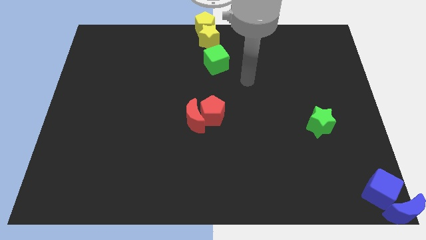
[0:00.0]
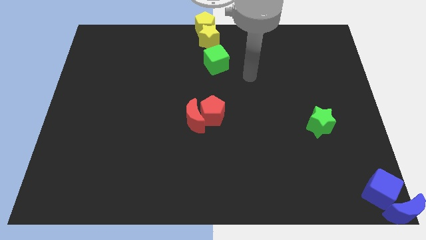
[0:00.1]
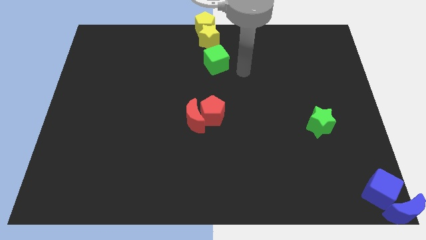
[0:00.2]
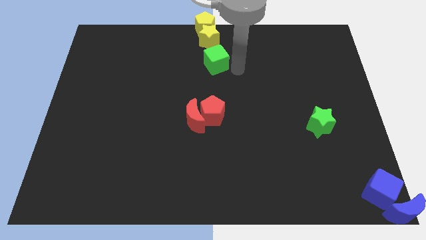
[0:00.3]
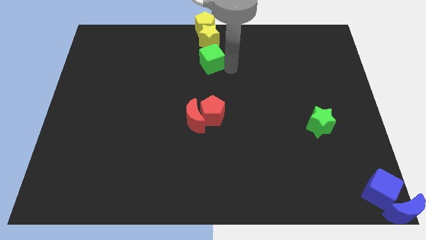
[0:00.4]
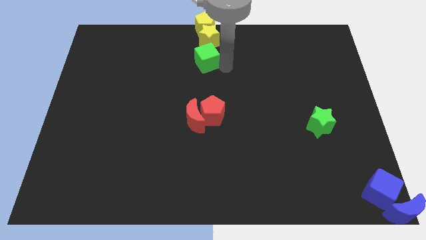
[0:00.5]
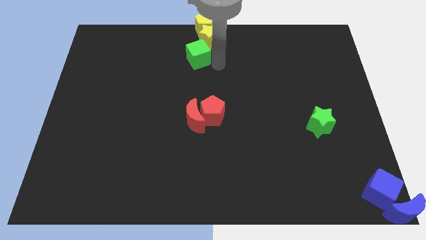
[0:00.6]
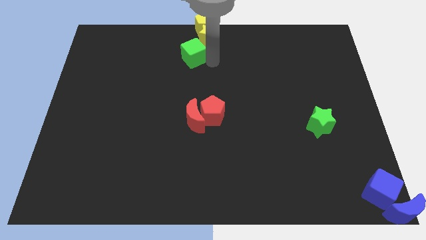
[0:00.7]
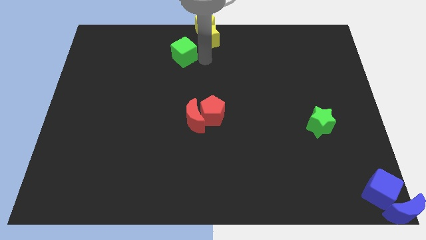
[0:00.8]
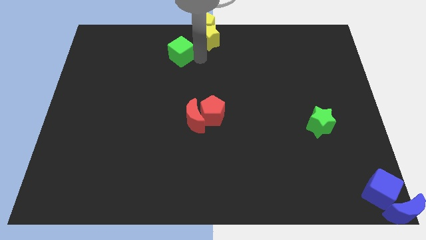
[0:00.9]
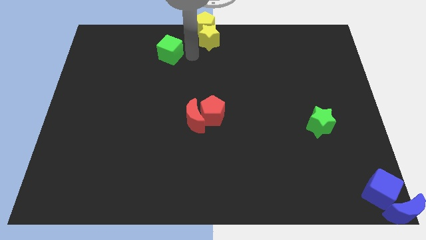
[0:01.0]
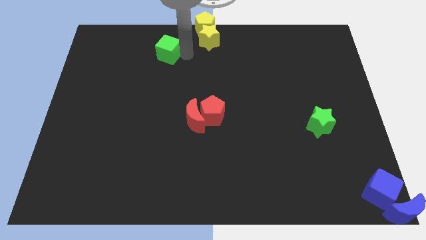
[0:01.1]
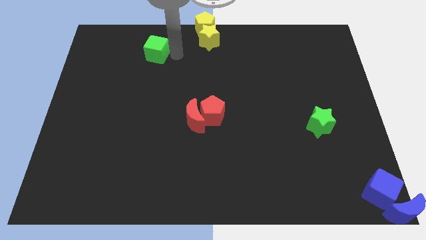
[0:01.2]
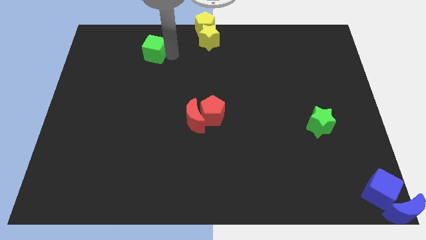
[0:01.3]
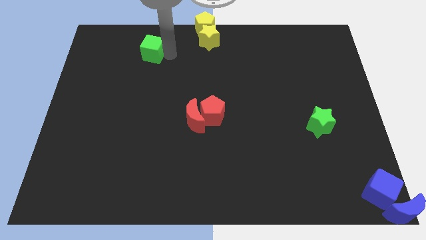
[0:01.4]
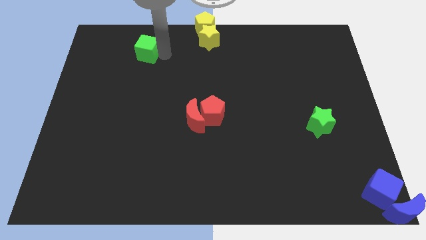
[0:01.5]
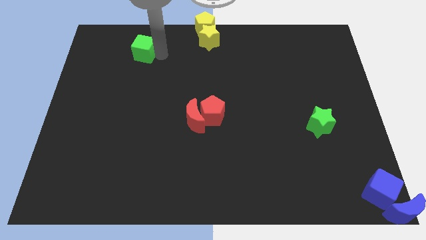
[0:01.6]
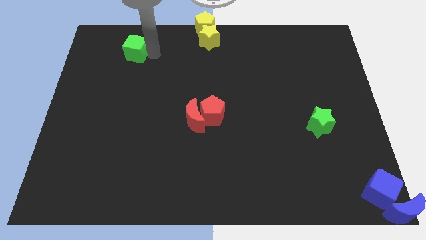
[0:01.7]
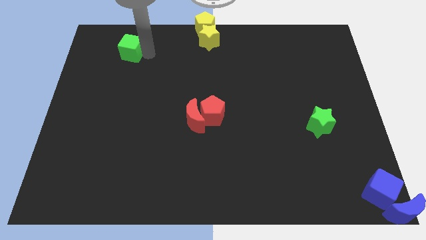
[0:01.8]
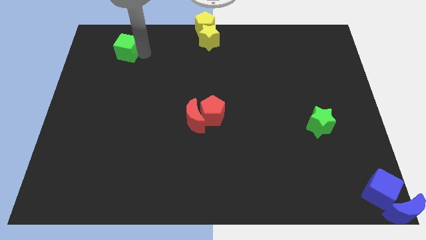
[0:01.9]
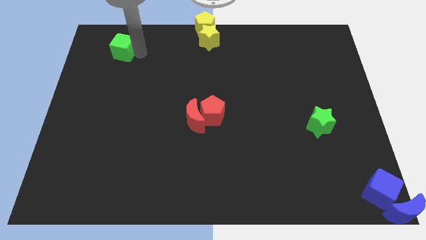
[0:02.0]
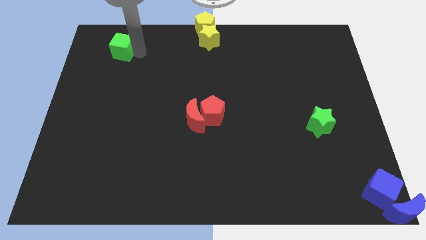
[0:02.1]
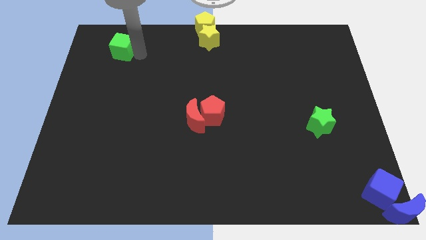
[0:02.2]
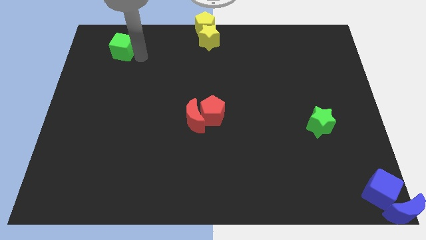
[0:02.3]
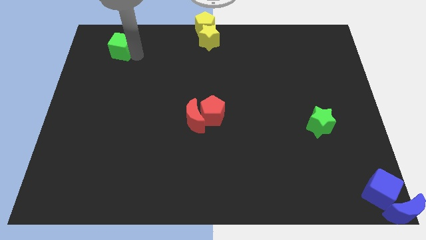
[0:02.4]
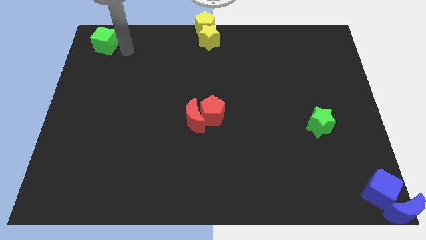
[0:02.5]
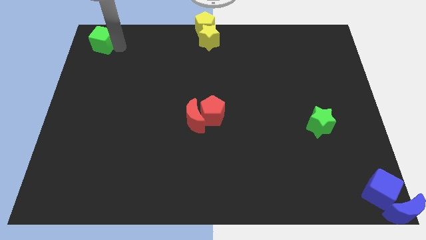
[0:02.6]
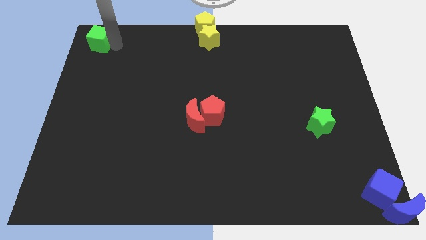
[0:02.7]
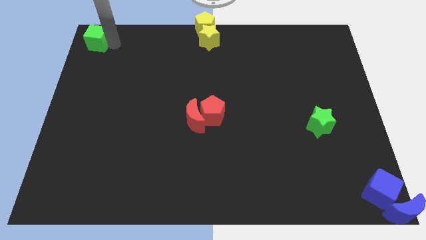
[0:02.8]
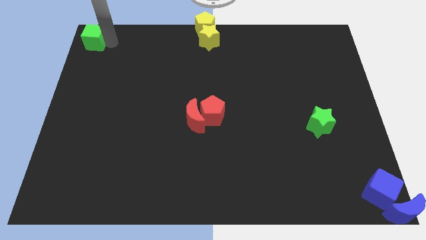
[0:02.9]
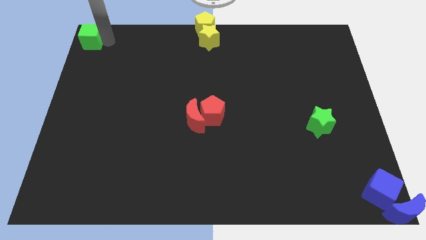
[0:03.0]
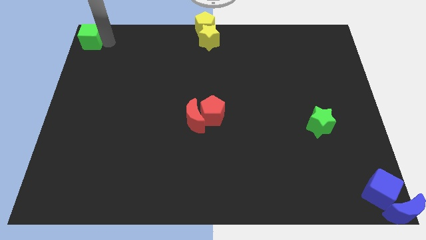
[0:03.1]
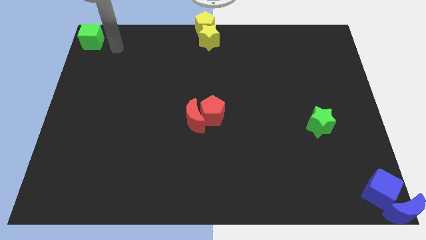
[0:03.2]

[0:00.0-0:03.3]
place the green cube to the top left corner of the board

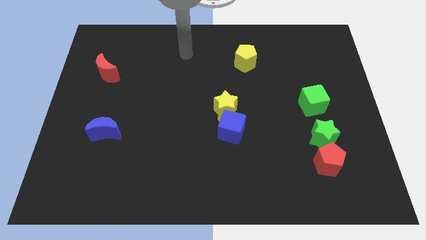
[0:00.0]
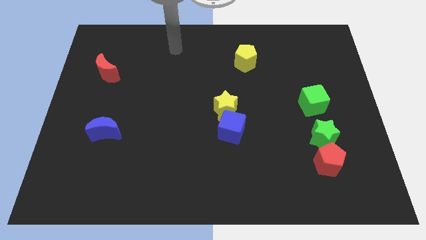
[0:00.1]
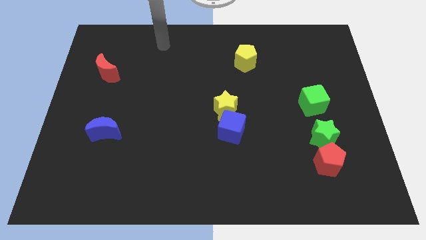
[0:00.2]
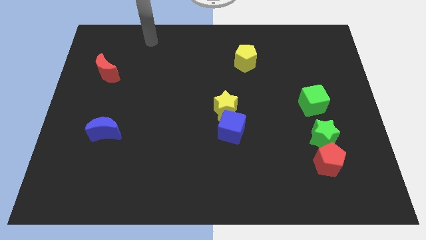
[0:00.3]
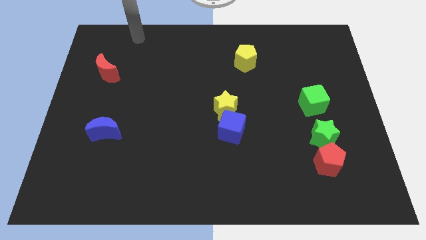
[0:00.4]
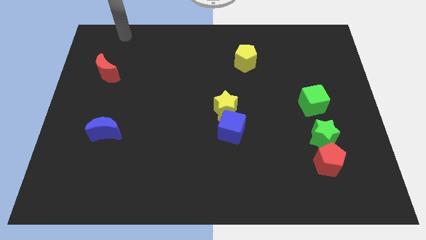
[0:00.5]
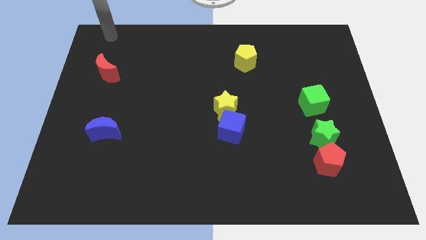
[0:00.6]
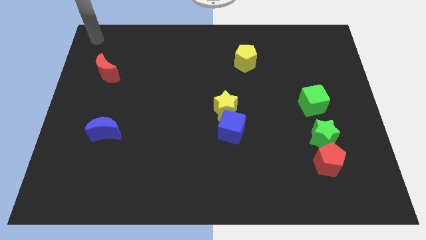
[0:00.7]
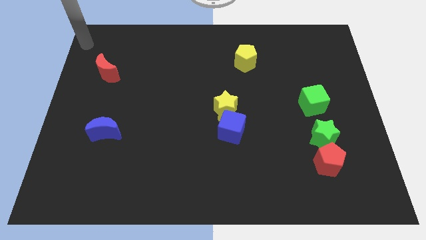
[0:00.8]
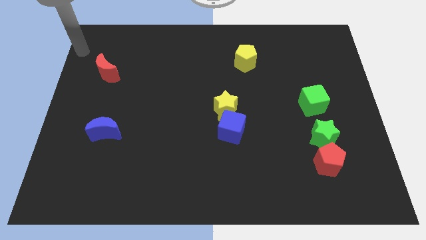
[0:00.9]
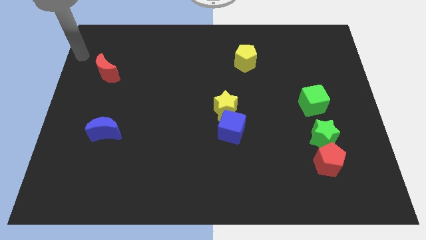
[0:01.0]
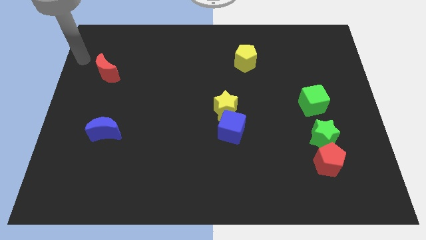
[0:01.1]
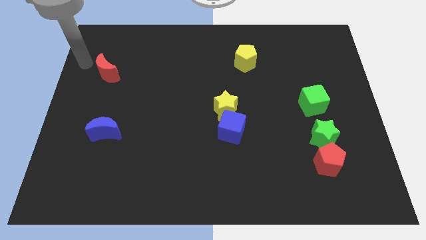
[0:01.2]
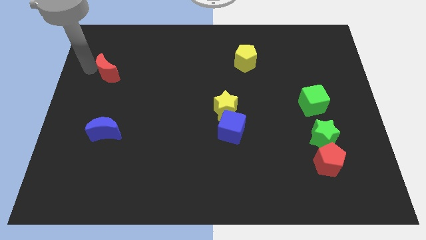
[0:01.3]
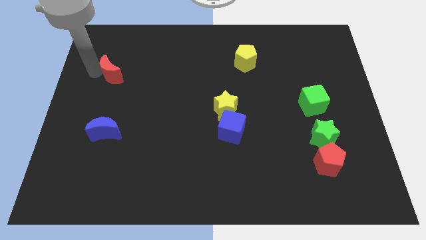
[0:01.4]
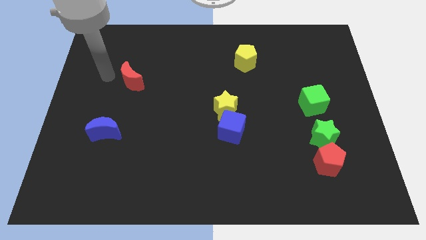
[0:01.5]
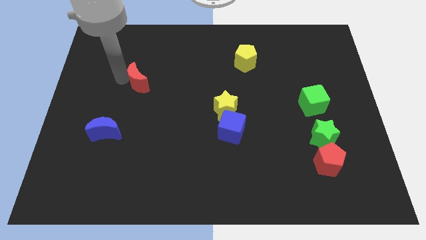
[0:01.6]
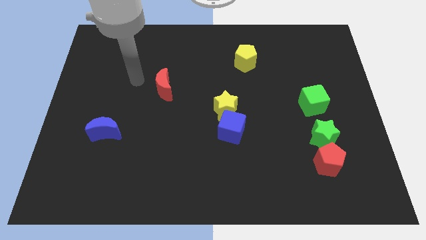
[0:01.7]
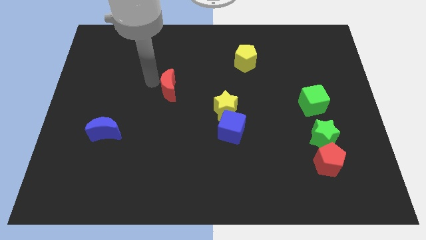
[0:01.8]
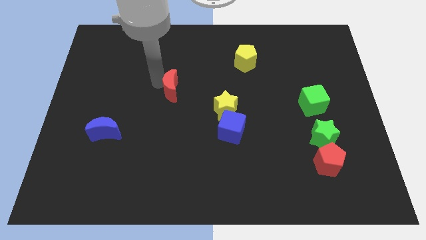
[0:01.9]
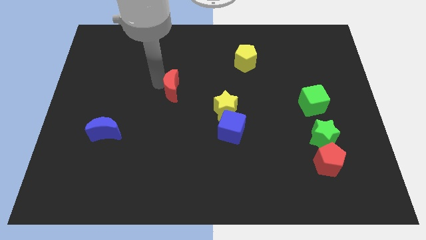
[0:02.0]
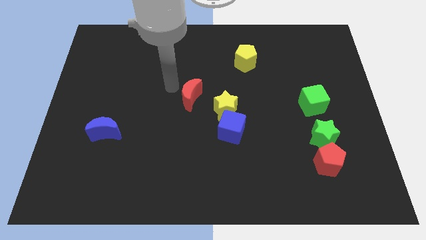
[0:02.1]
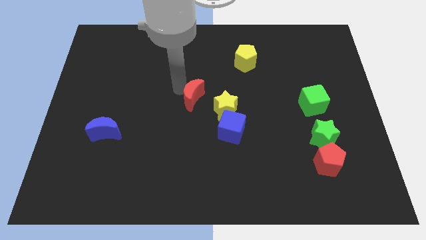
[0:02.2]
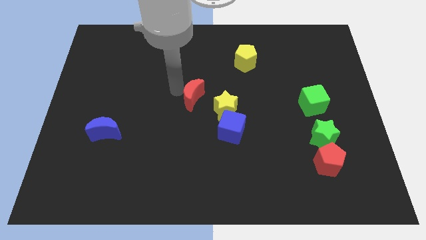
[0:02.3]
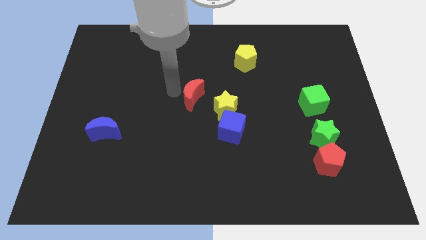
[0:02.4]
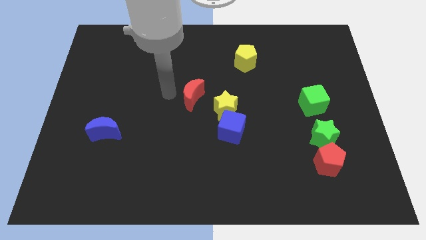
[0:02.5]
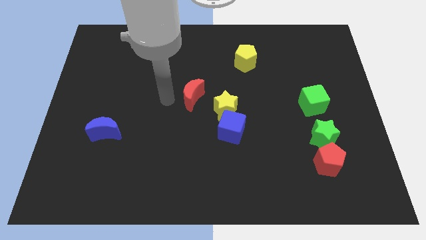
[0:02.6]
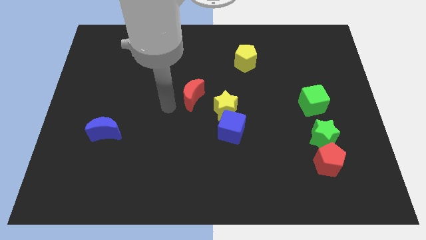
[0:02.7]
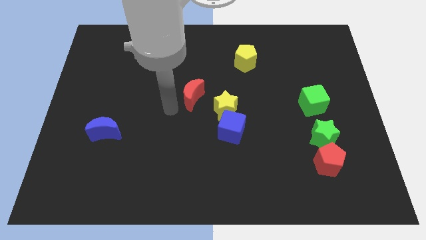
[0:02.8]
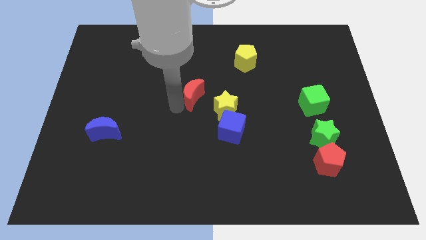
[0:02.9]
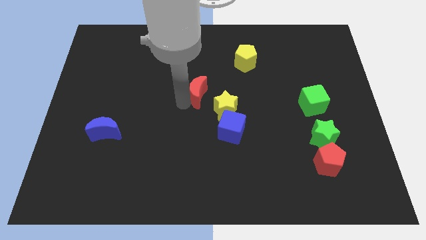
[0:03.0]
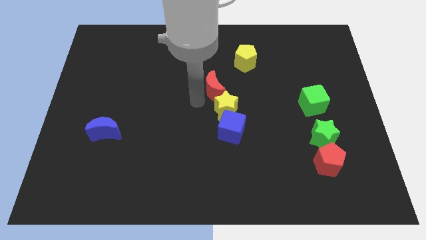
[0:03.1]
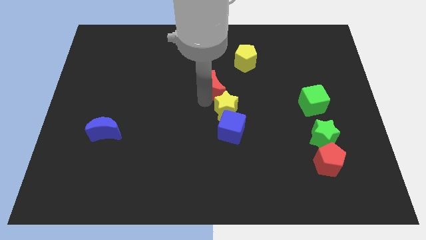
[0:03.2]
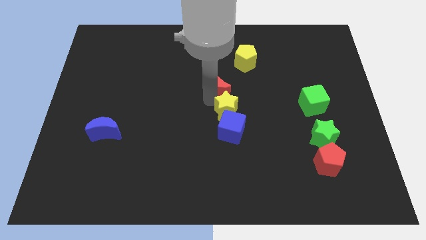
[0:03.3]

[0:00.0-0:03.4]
place the red crescent above the yellow star

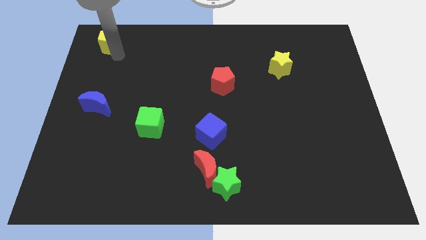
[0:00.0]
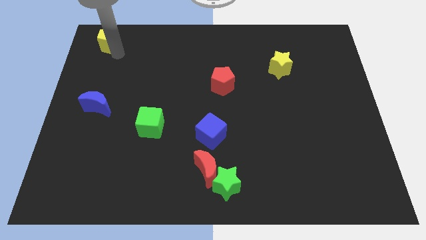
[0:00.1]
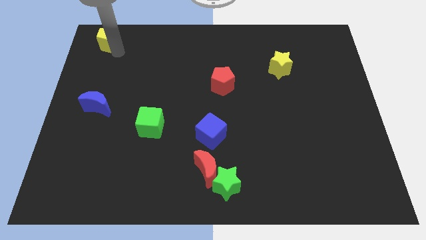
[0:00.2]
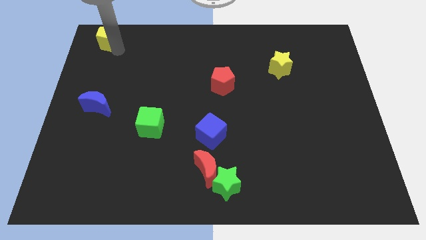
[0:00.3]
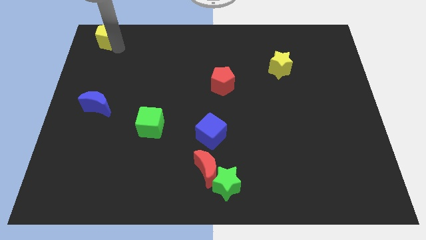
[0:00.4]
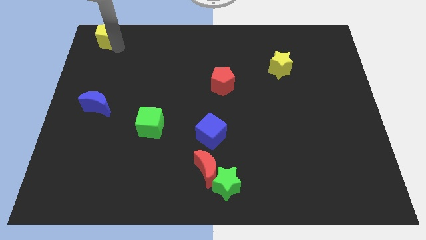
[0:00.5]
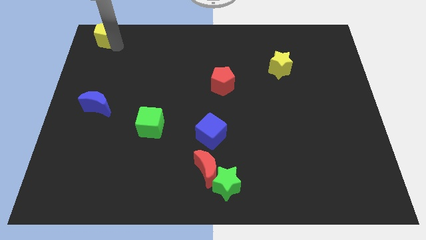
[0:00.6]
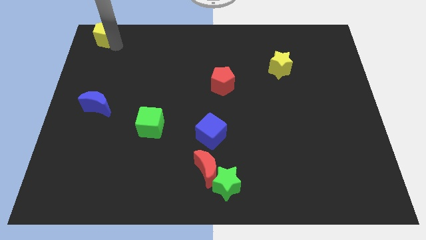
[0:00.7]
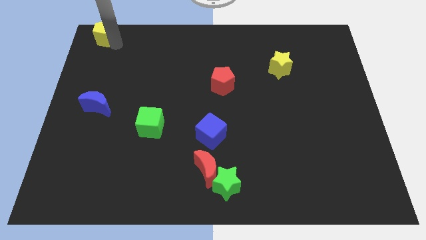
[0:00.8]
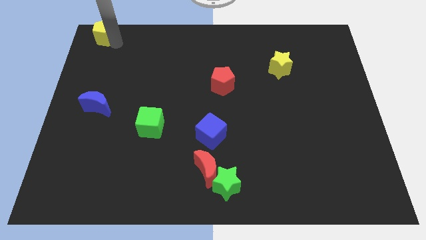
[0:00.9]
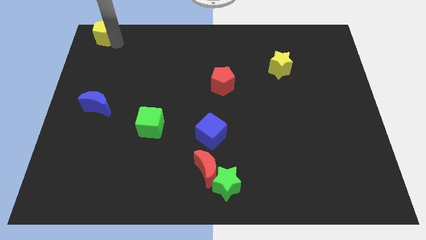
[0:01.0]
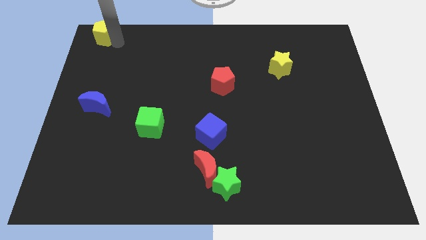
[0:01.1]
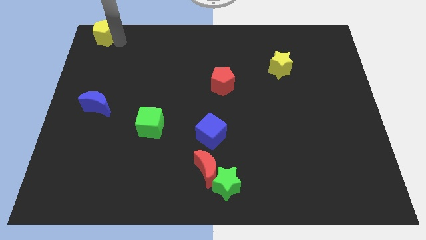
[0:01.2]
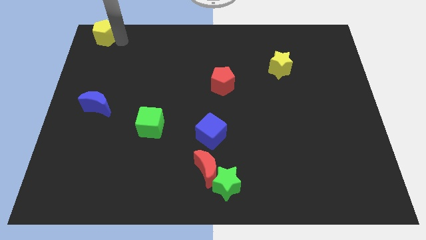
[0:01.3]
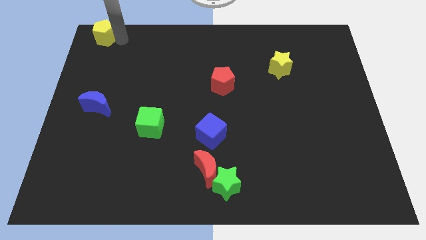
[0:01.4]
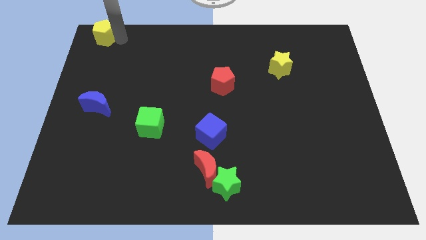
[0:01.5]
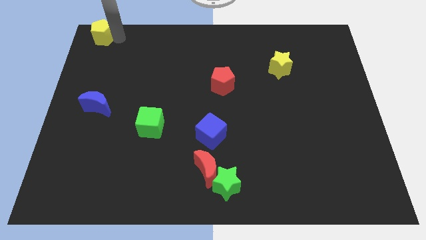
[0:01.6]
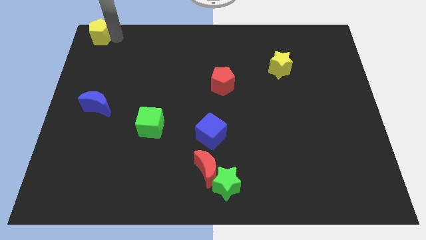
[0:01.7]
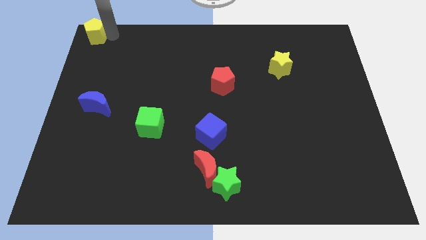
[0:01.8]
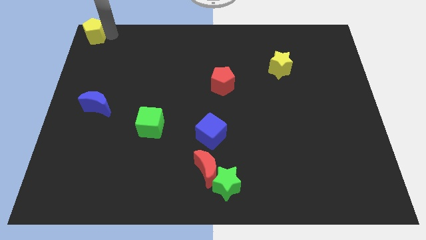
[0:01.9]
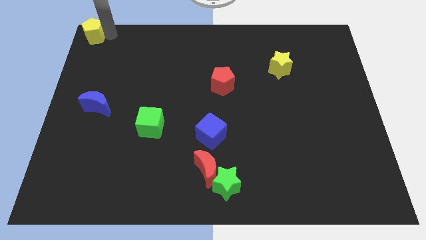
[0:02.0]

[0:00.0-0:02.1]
push the yellow pentagon to the top left of the board

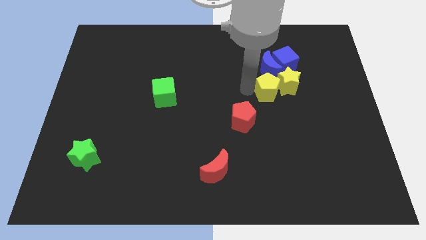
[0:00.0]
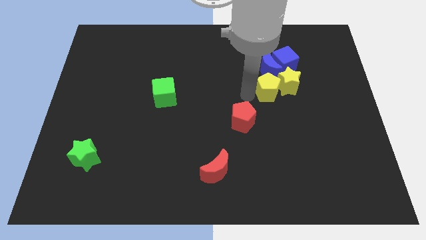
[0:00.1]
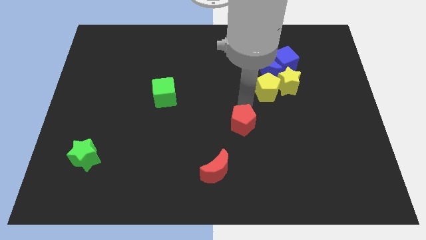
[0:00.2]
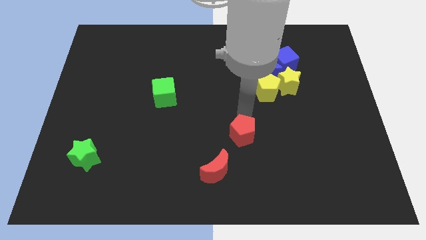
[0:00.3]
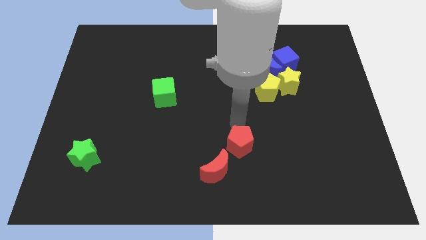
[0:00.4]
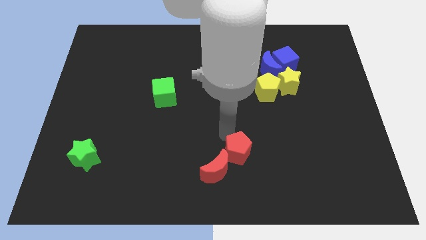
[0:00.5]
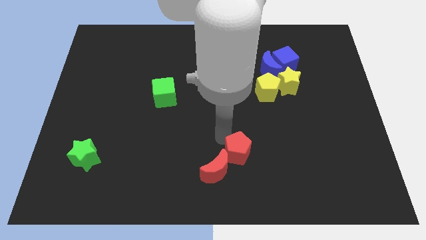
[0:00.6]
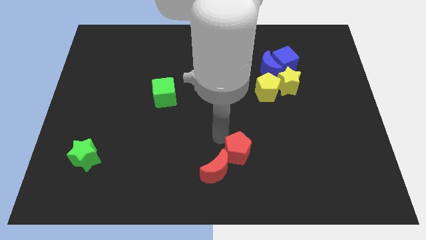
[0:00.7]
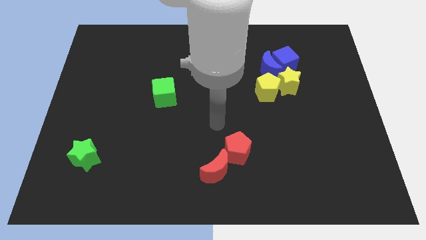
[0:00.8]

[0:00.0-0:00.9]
move the red pentagon into the red moon
